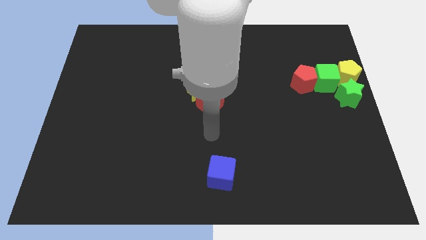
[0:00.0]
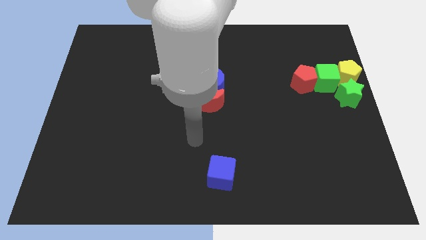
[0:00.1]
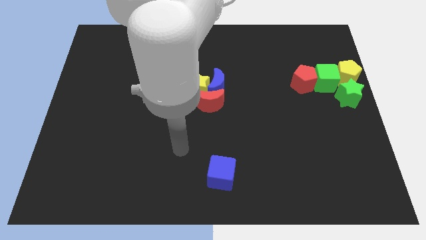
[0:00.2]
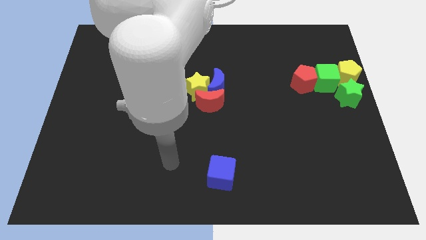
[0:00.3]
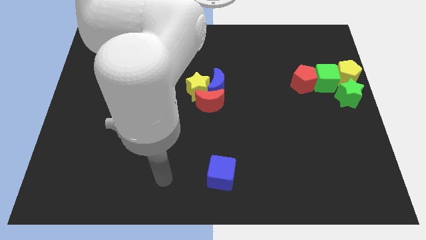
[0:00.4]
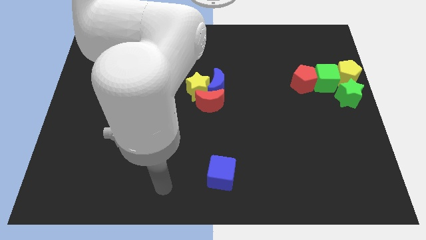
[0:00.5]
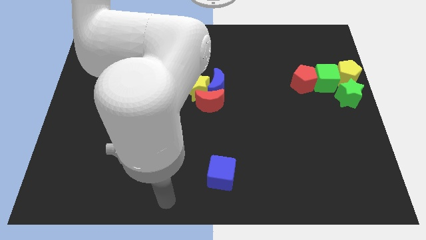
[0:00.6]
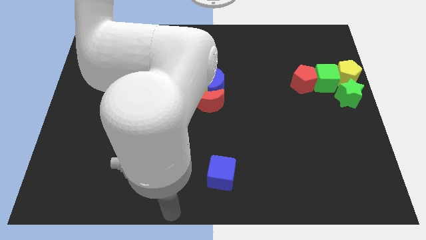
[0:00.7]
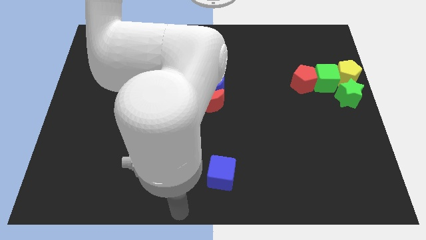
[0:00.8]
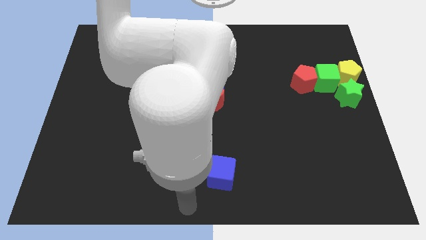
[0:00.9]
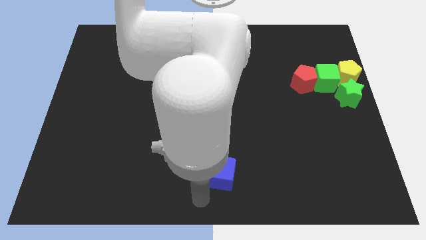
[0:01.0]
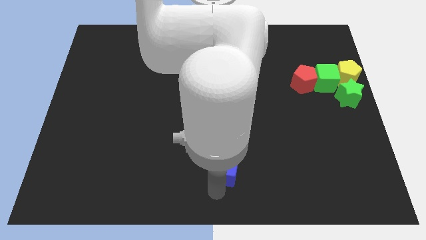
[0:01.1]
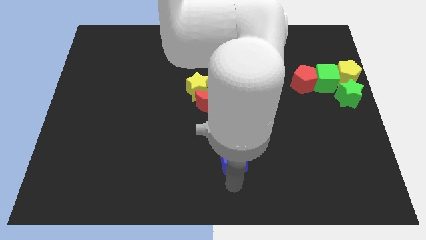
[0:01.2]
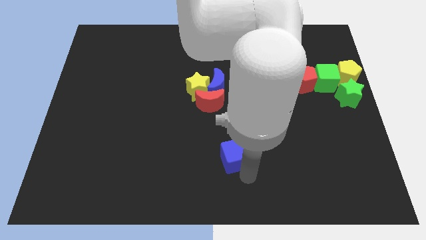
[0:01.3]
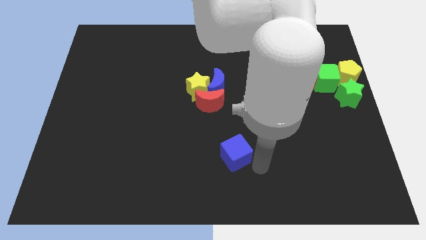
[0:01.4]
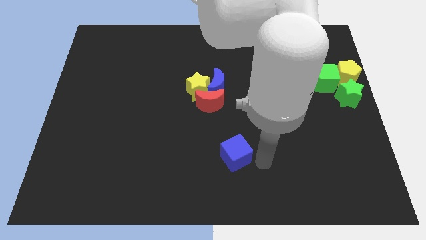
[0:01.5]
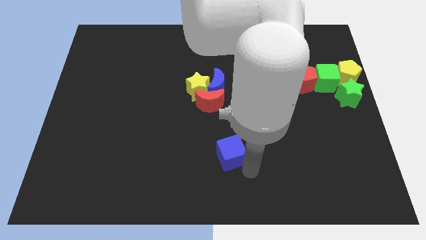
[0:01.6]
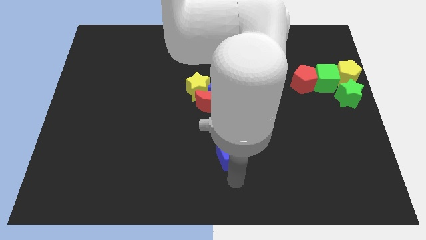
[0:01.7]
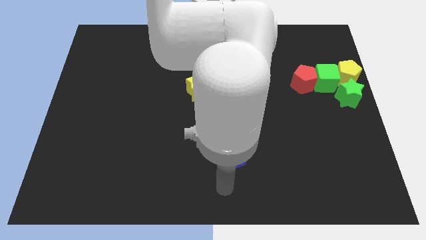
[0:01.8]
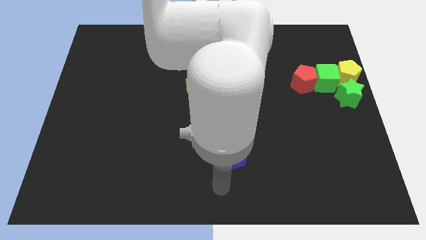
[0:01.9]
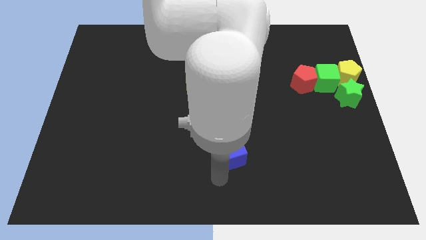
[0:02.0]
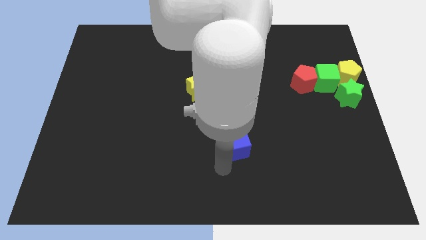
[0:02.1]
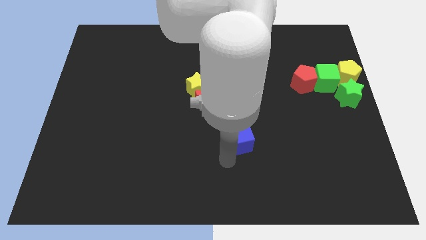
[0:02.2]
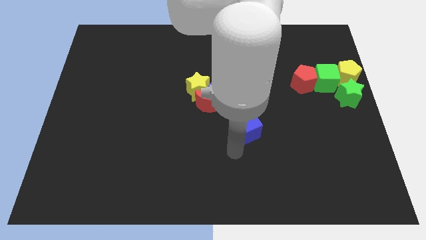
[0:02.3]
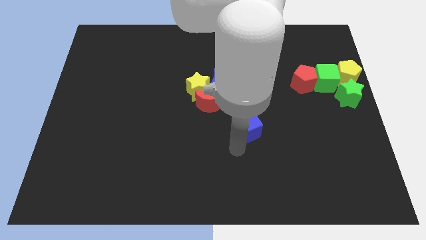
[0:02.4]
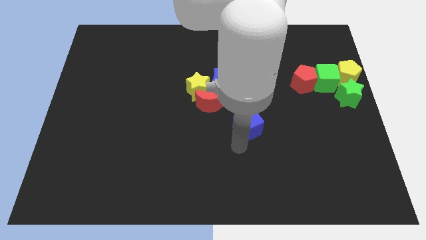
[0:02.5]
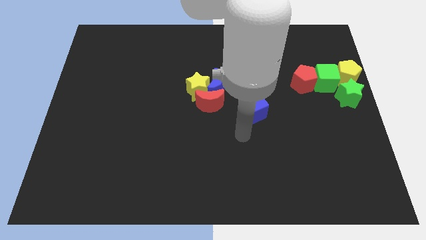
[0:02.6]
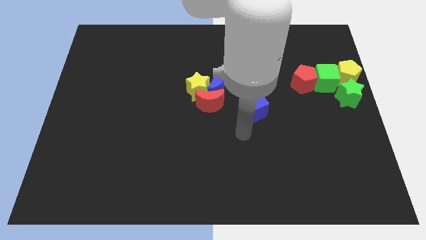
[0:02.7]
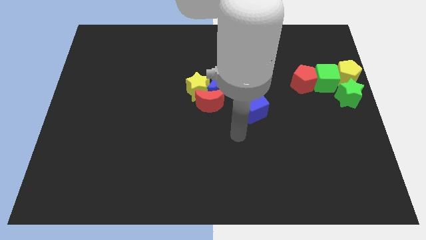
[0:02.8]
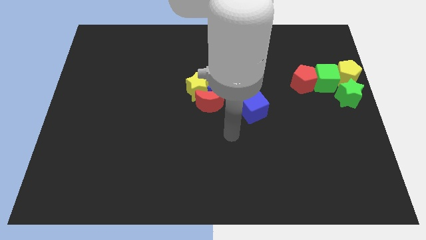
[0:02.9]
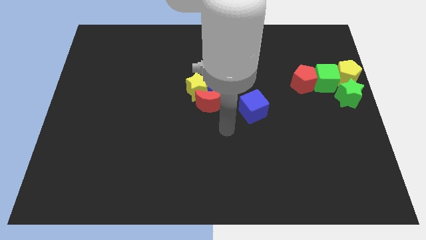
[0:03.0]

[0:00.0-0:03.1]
move the blue cube at the bottom right side of the blue crescent

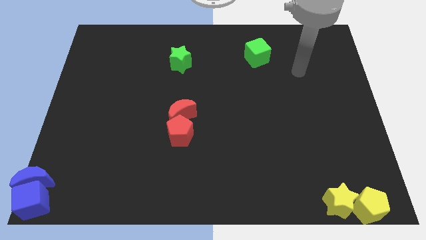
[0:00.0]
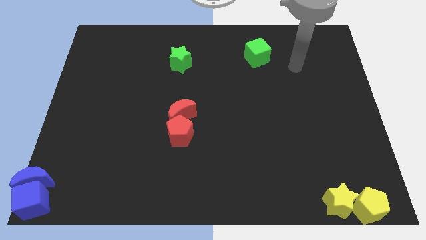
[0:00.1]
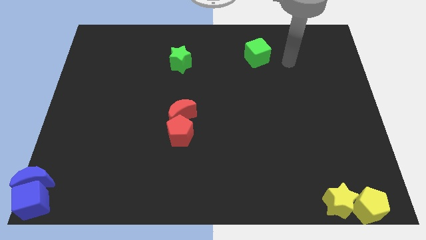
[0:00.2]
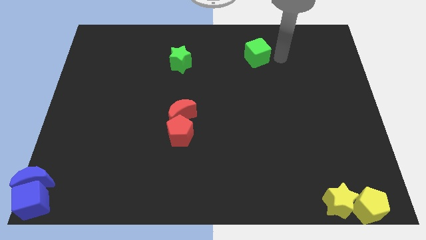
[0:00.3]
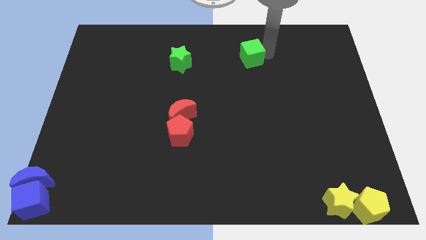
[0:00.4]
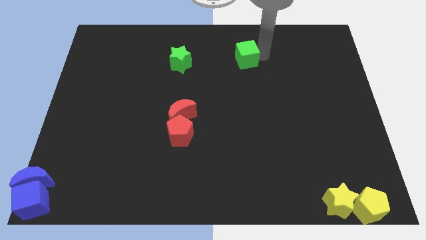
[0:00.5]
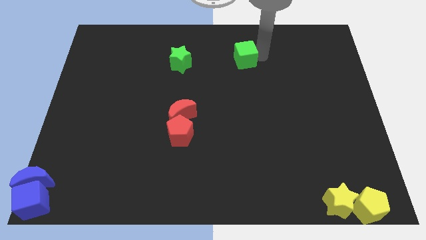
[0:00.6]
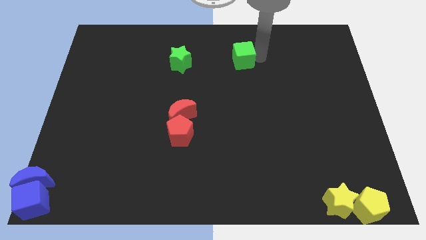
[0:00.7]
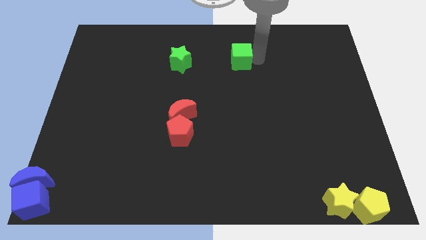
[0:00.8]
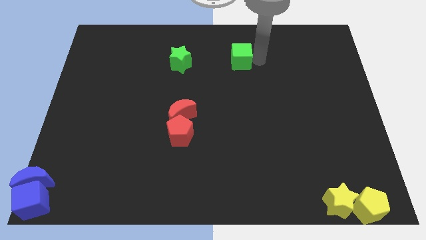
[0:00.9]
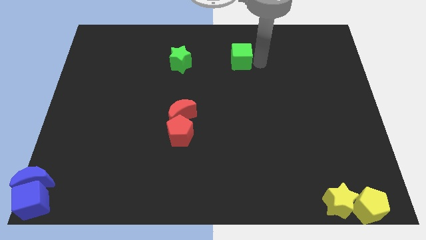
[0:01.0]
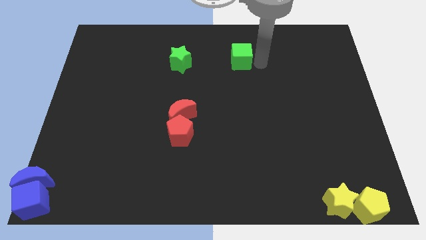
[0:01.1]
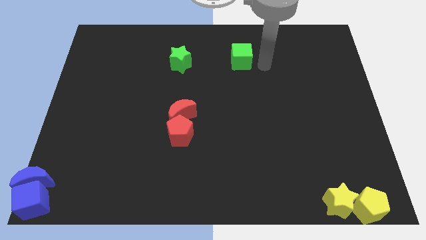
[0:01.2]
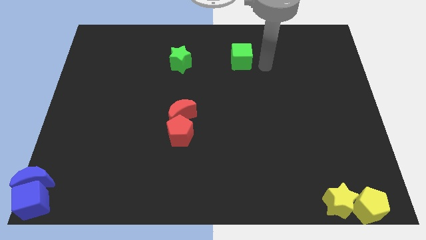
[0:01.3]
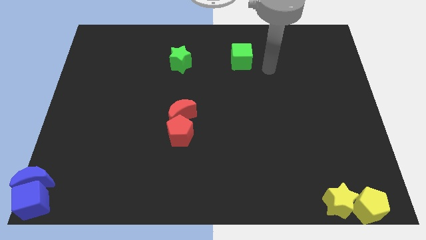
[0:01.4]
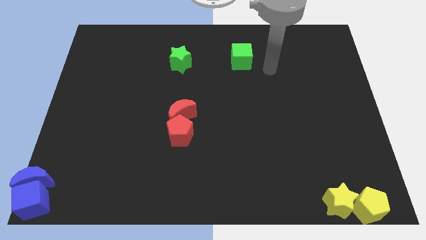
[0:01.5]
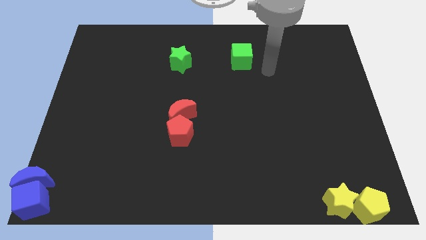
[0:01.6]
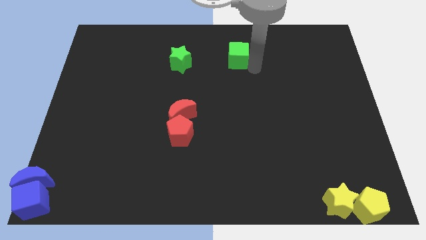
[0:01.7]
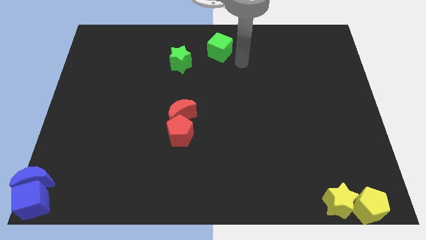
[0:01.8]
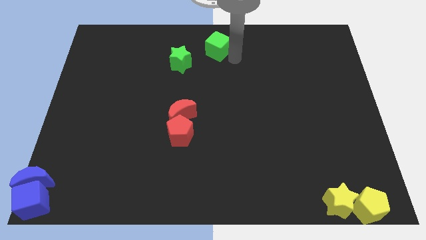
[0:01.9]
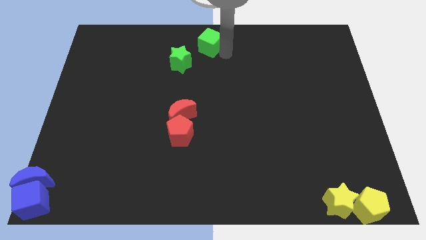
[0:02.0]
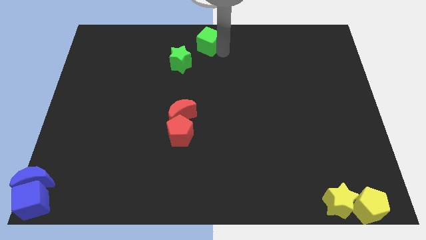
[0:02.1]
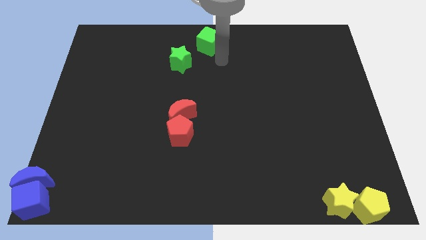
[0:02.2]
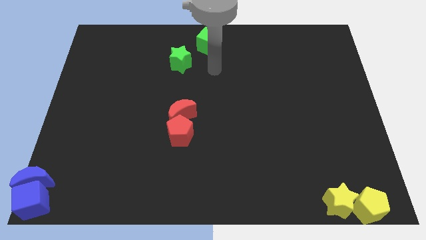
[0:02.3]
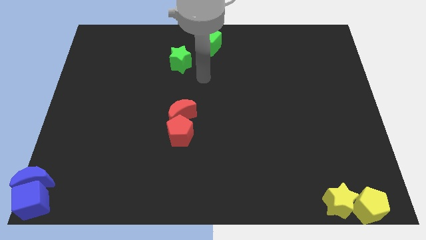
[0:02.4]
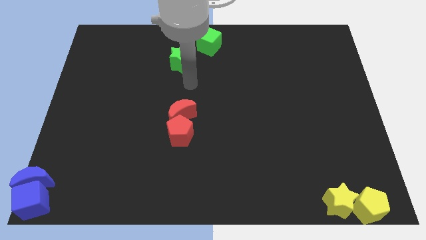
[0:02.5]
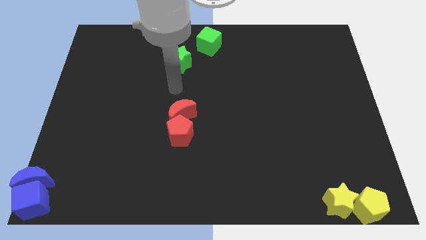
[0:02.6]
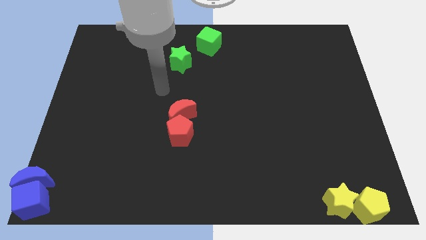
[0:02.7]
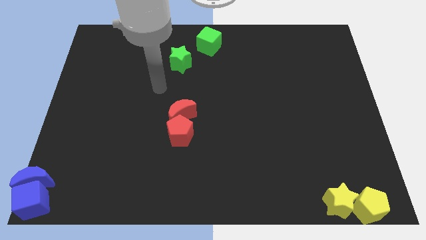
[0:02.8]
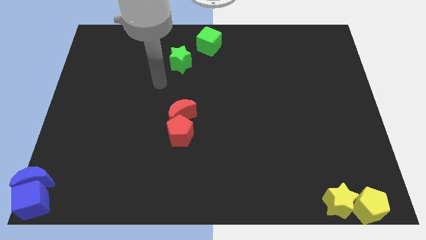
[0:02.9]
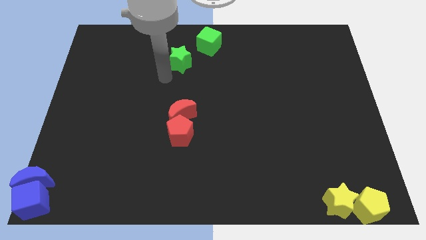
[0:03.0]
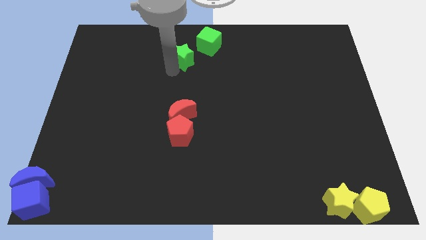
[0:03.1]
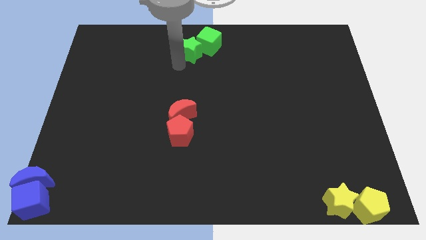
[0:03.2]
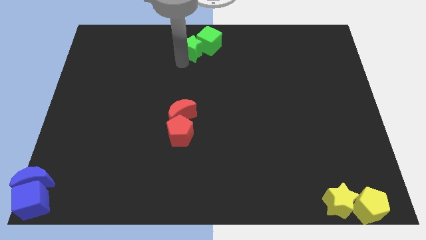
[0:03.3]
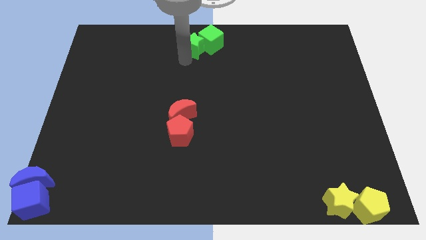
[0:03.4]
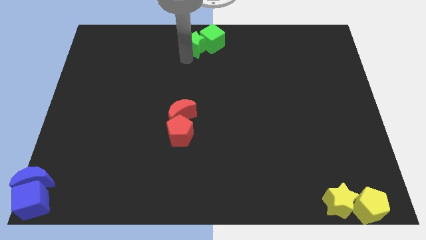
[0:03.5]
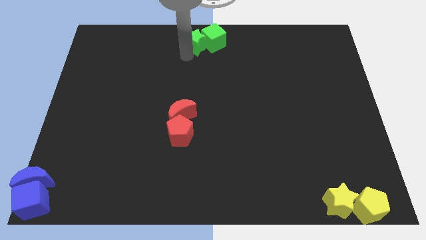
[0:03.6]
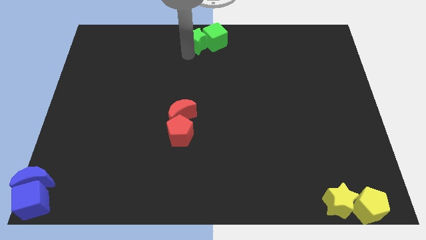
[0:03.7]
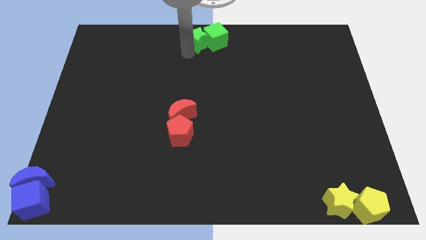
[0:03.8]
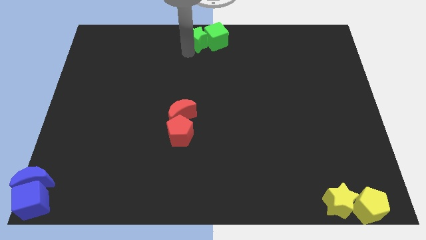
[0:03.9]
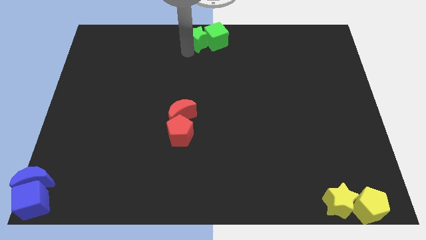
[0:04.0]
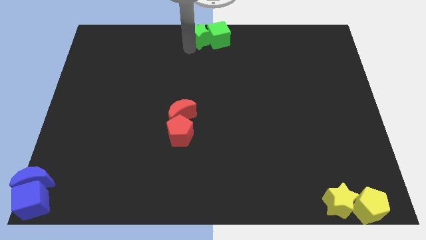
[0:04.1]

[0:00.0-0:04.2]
move the green blocks to the top center of the board

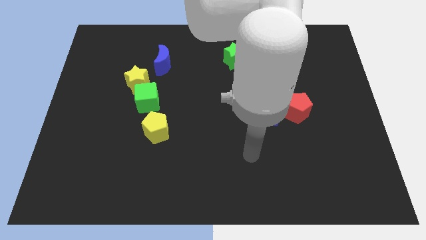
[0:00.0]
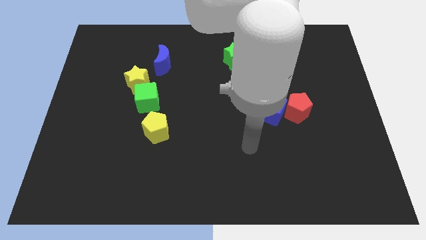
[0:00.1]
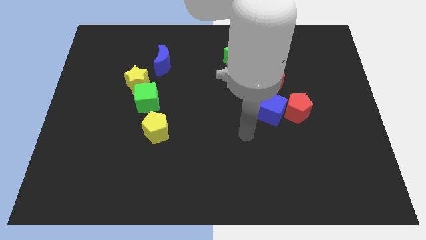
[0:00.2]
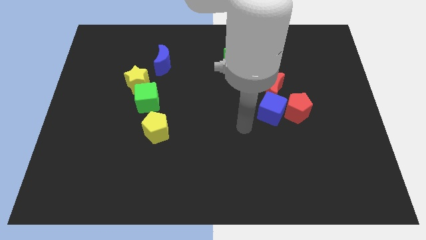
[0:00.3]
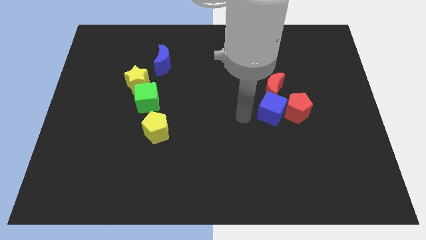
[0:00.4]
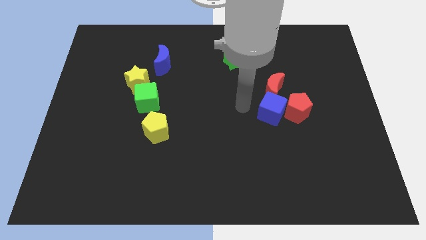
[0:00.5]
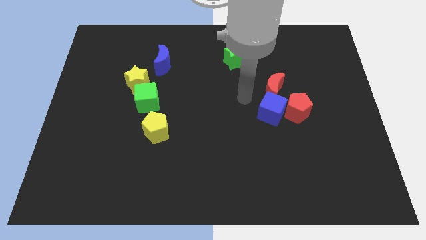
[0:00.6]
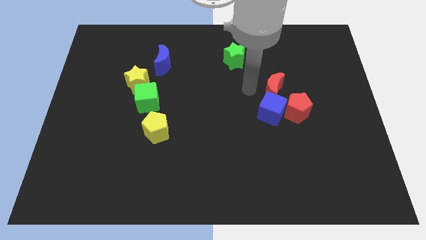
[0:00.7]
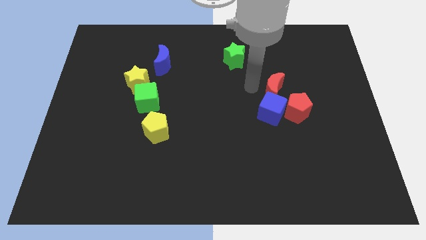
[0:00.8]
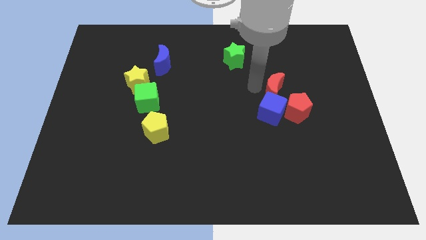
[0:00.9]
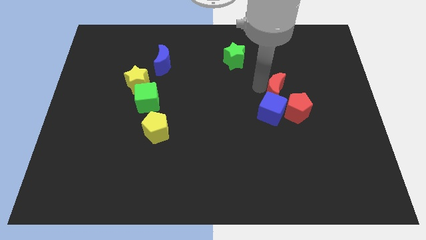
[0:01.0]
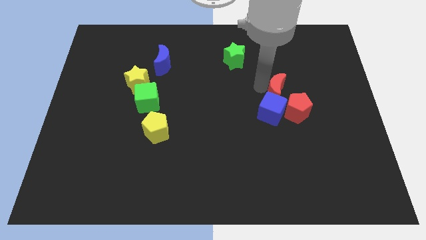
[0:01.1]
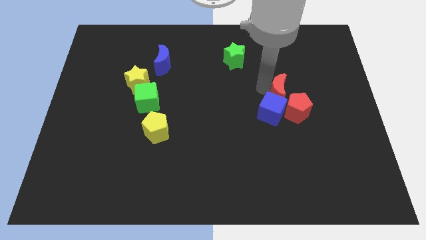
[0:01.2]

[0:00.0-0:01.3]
move your arm to the back of red moon

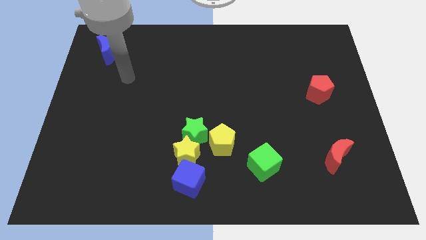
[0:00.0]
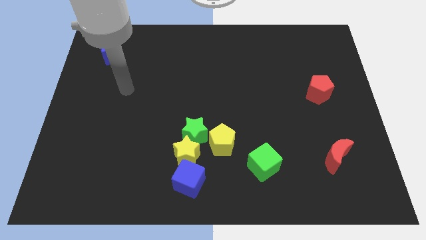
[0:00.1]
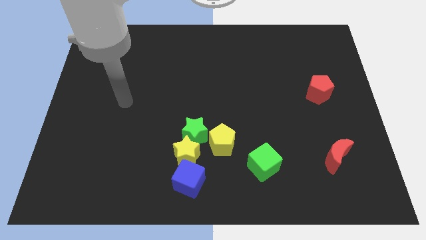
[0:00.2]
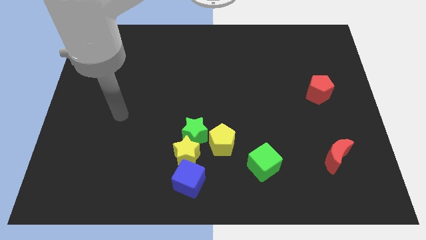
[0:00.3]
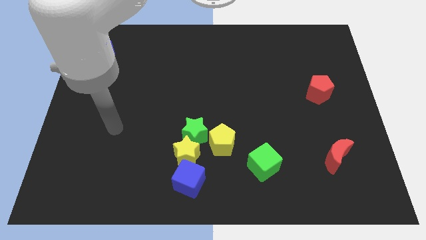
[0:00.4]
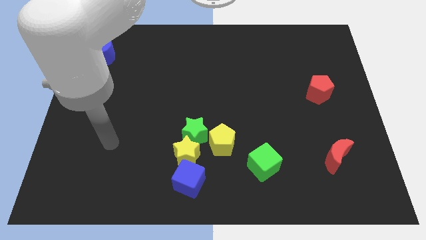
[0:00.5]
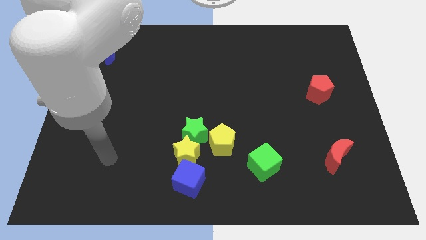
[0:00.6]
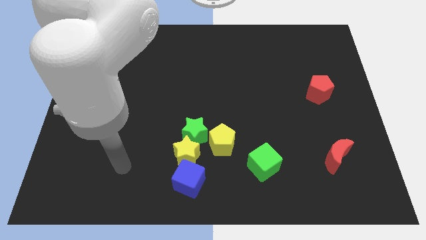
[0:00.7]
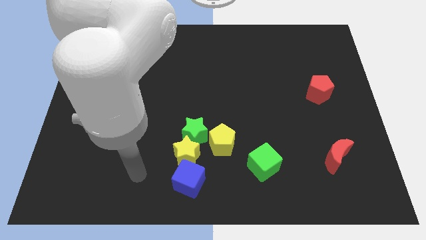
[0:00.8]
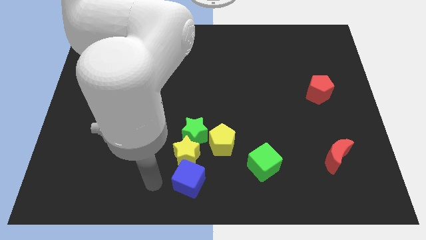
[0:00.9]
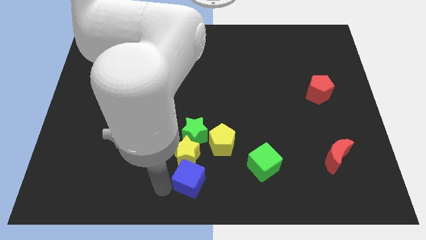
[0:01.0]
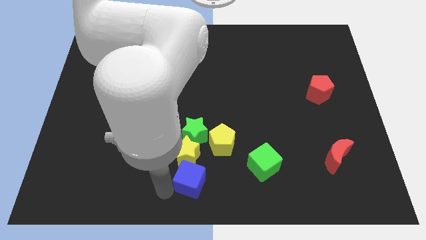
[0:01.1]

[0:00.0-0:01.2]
move your arm down and to the right
